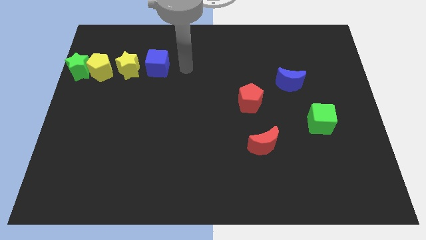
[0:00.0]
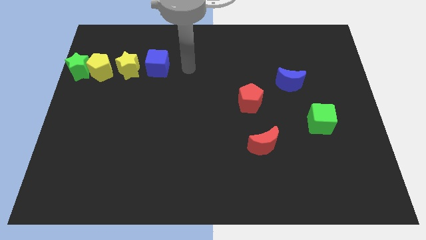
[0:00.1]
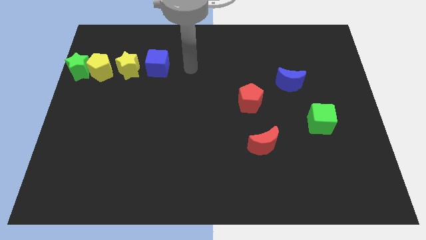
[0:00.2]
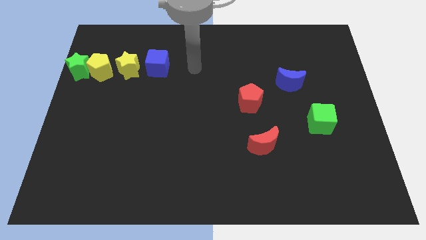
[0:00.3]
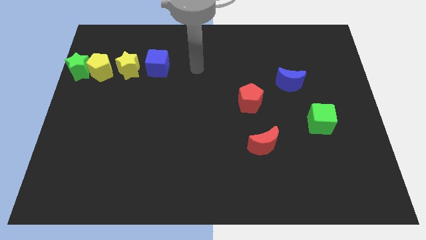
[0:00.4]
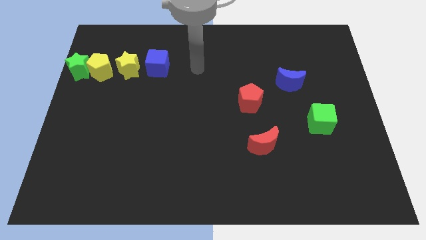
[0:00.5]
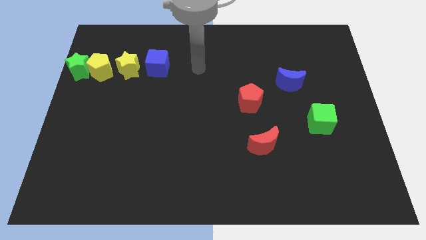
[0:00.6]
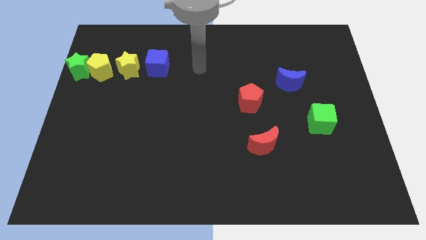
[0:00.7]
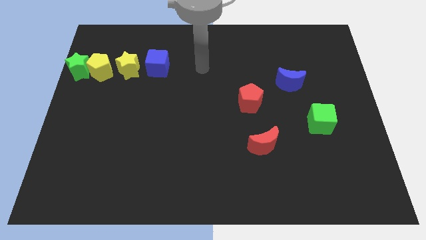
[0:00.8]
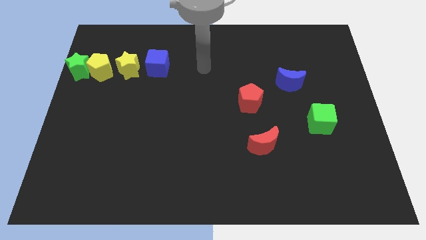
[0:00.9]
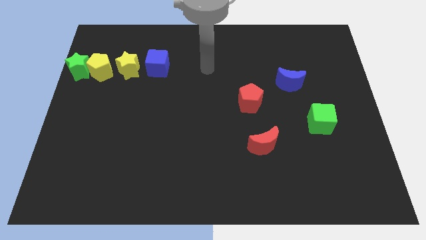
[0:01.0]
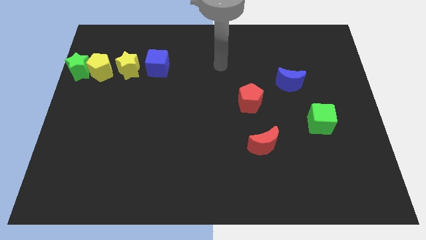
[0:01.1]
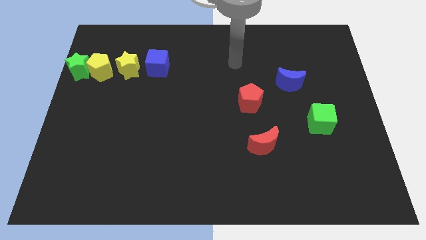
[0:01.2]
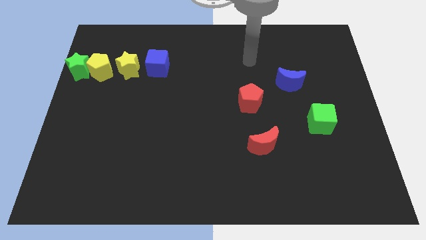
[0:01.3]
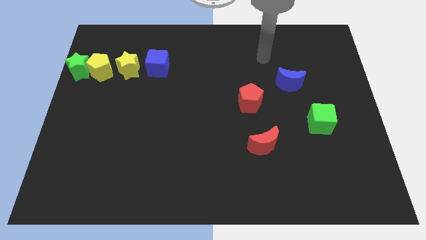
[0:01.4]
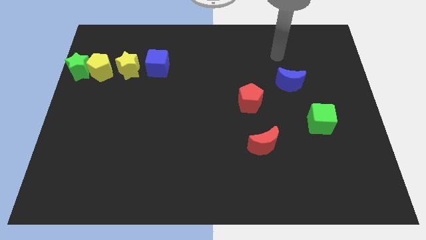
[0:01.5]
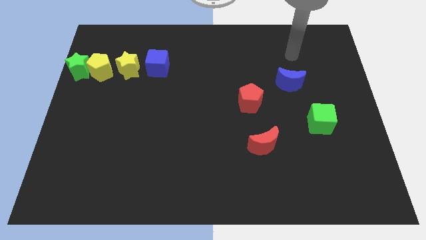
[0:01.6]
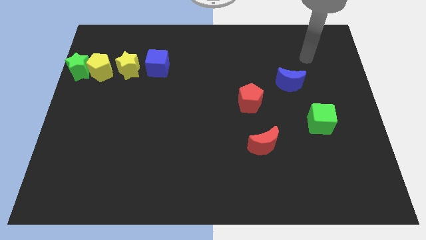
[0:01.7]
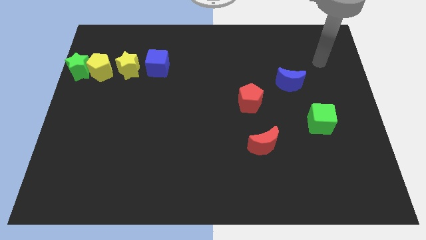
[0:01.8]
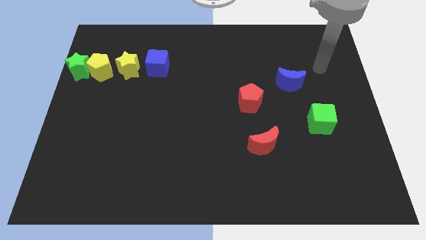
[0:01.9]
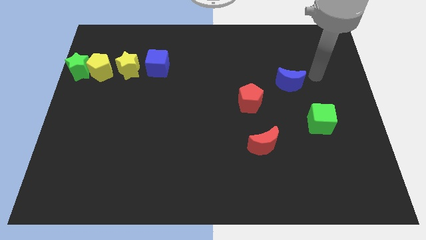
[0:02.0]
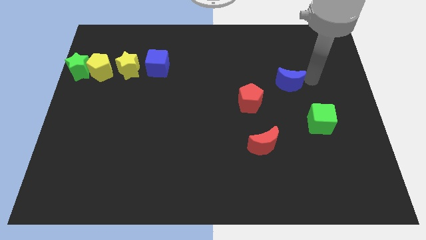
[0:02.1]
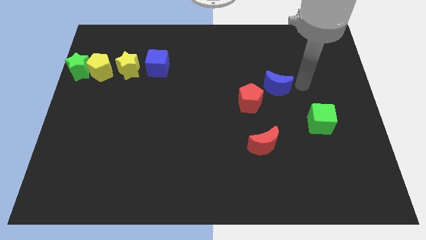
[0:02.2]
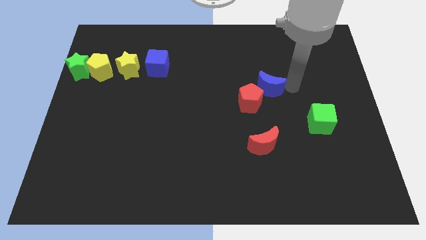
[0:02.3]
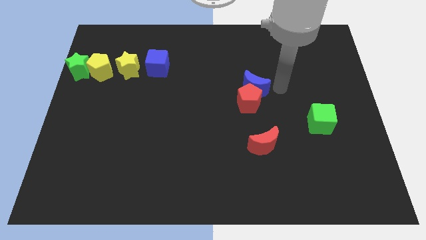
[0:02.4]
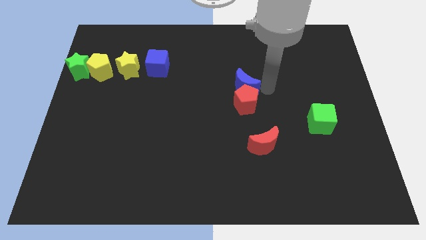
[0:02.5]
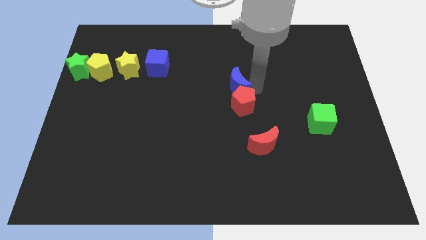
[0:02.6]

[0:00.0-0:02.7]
move the blue crescent to the top of the red pentagon

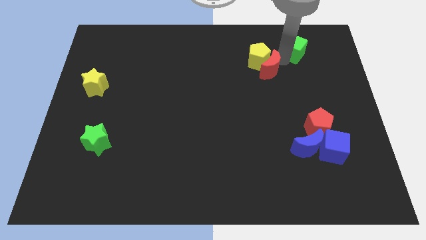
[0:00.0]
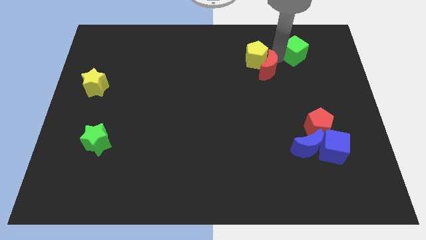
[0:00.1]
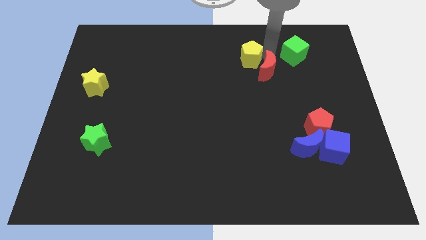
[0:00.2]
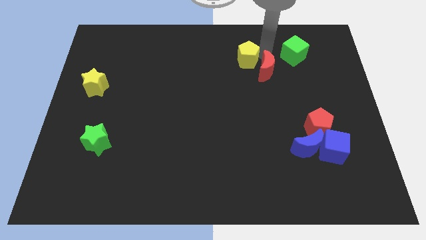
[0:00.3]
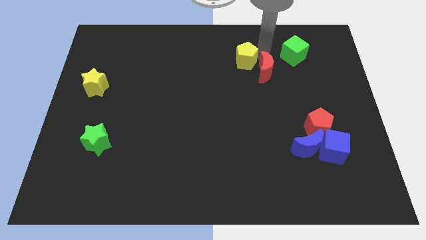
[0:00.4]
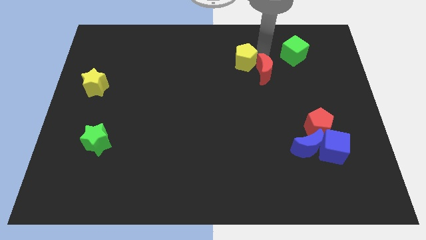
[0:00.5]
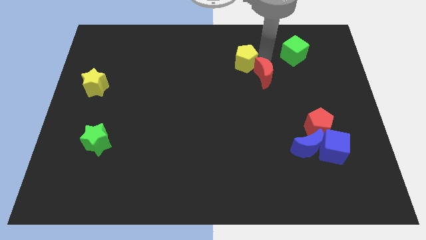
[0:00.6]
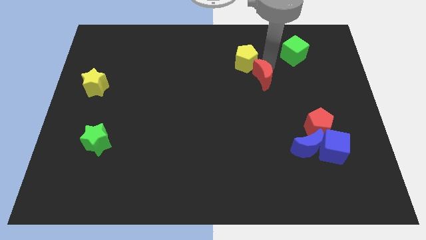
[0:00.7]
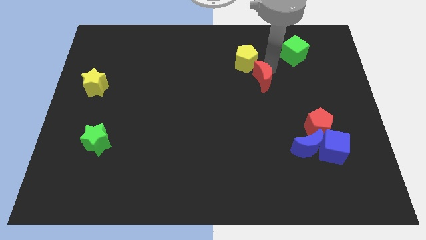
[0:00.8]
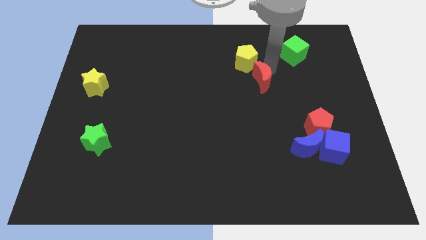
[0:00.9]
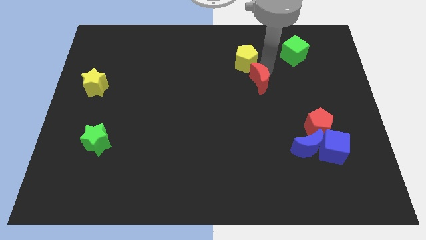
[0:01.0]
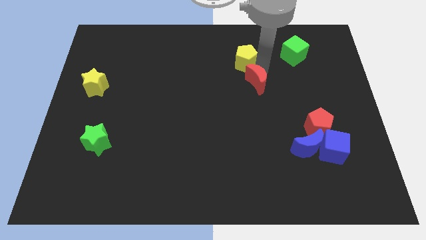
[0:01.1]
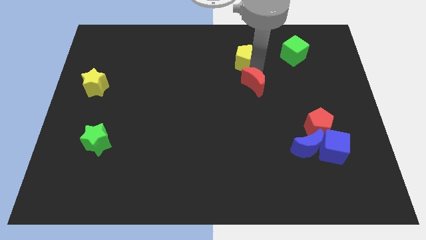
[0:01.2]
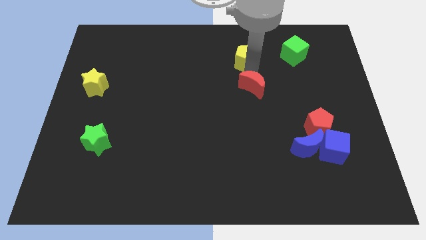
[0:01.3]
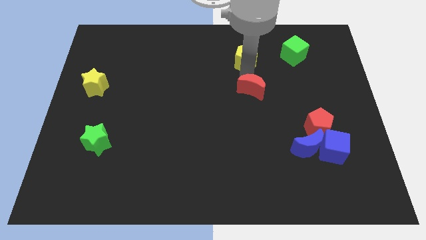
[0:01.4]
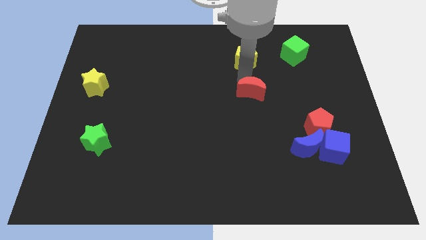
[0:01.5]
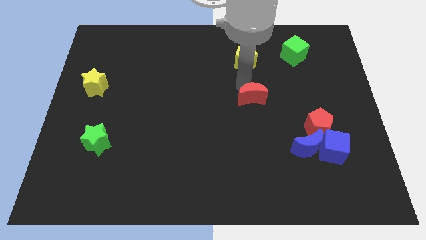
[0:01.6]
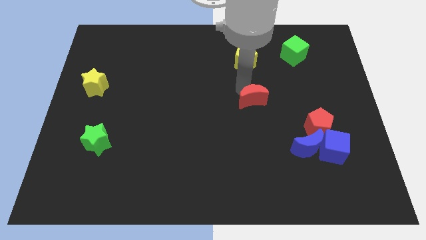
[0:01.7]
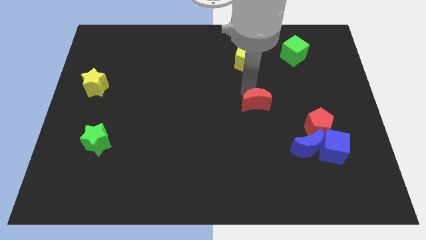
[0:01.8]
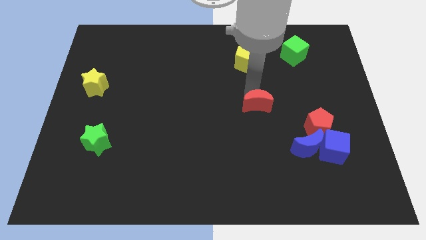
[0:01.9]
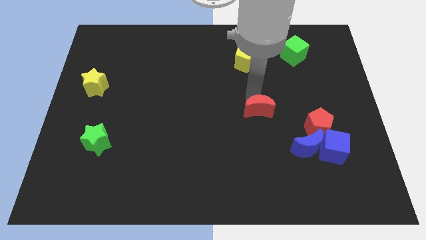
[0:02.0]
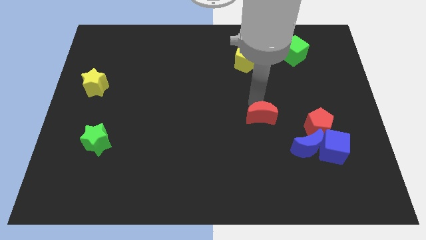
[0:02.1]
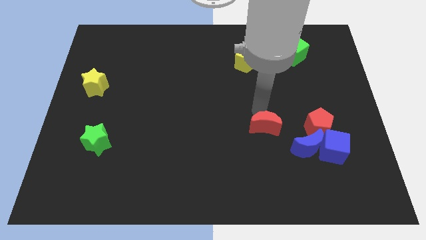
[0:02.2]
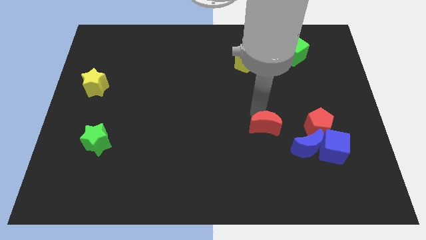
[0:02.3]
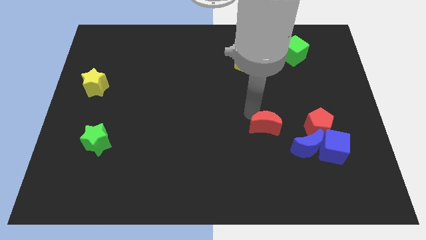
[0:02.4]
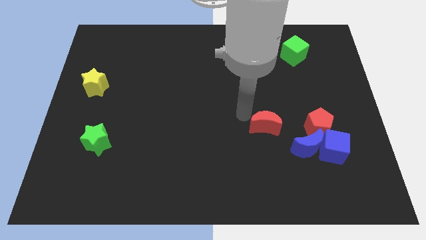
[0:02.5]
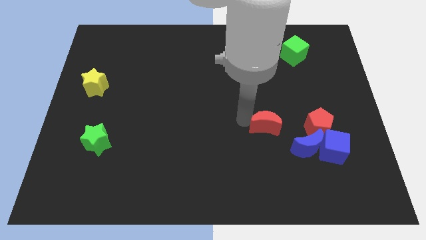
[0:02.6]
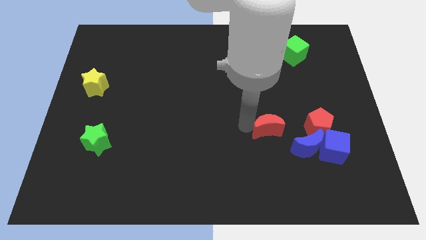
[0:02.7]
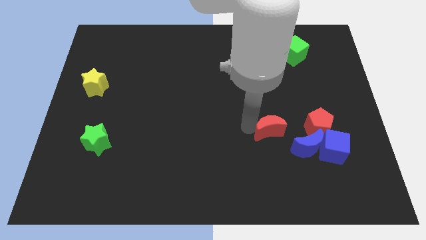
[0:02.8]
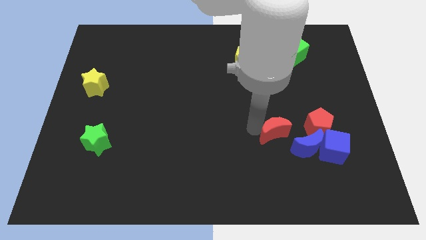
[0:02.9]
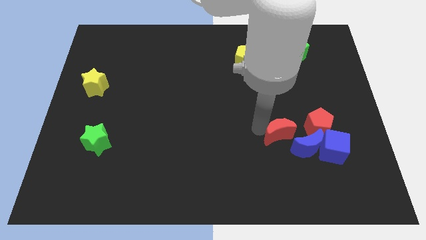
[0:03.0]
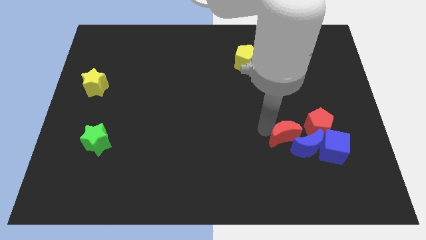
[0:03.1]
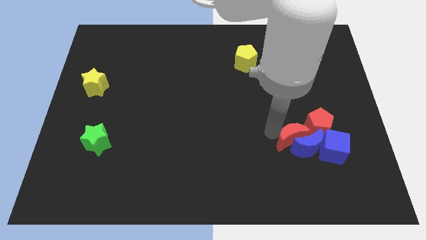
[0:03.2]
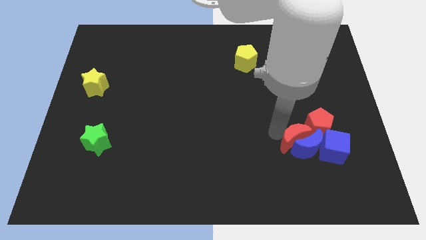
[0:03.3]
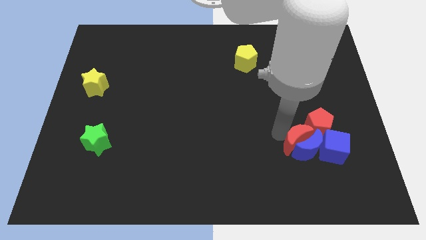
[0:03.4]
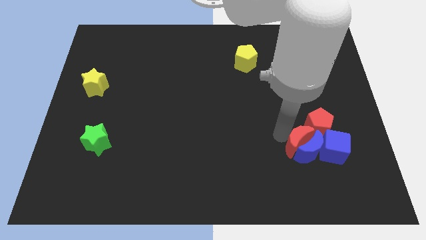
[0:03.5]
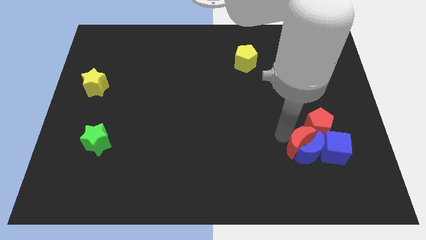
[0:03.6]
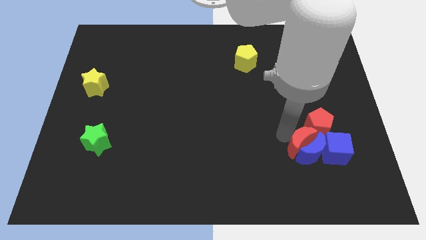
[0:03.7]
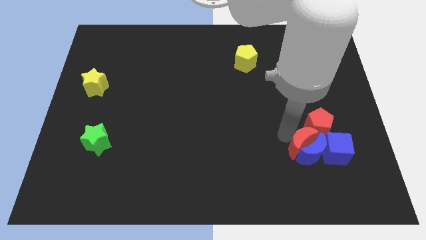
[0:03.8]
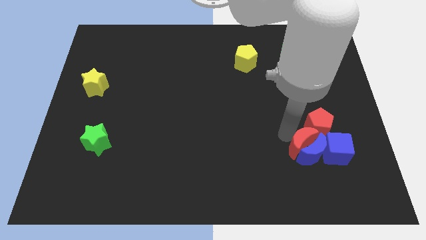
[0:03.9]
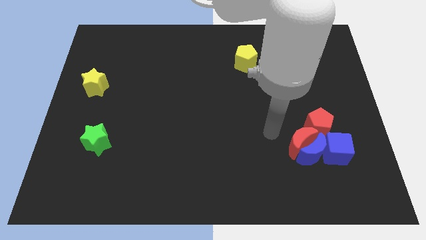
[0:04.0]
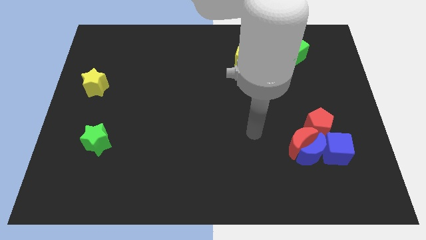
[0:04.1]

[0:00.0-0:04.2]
move the red moon horizontally on the right side of the green star

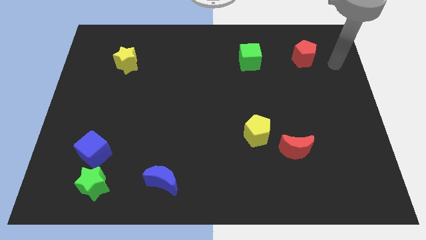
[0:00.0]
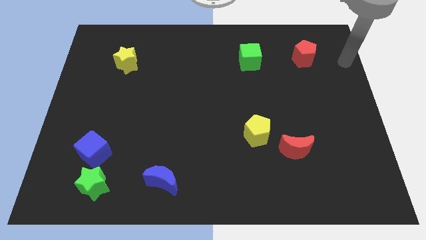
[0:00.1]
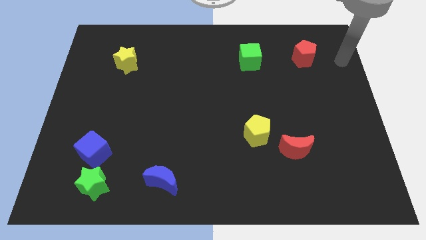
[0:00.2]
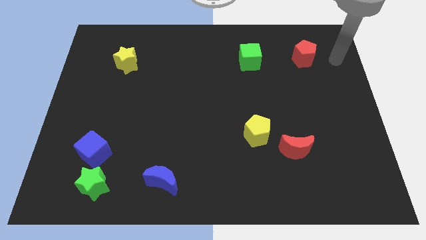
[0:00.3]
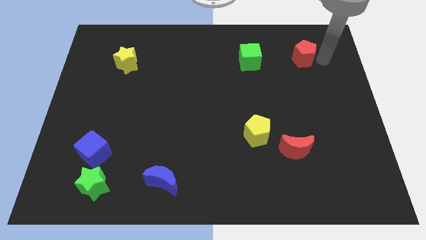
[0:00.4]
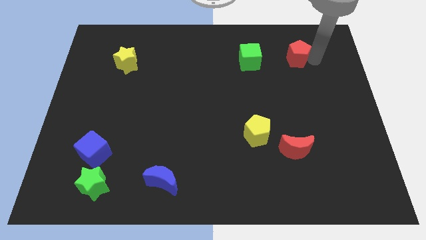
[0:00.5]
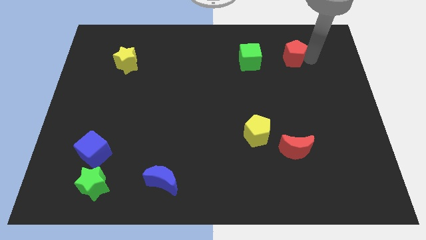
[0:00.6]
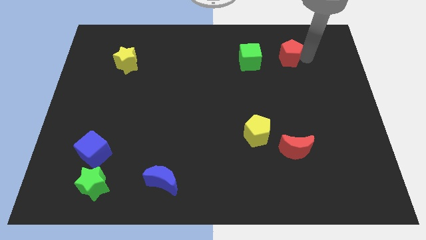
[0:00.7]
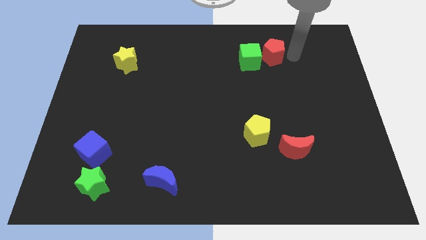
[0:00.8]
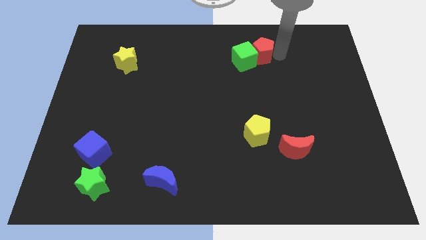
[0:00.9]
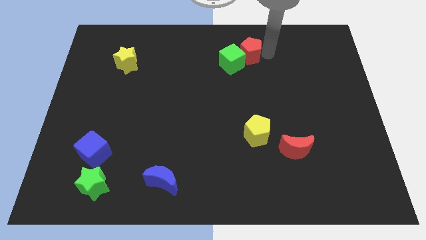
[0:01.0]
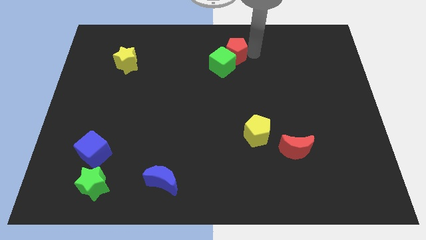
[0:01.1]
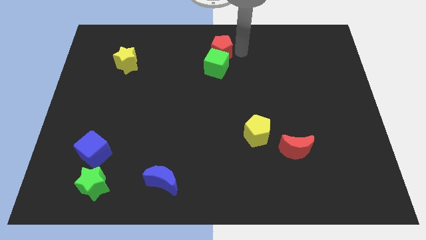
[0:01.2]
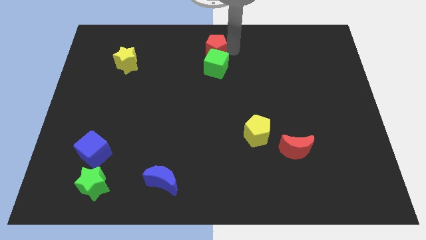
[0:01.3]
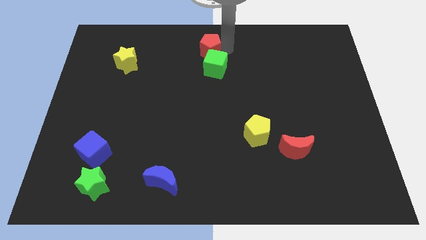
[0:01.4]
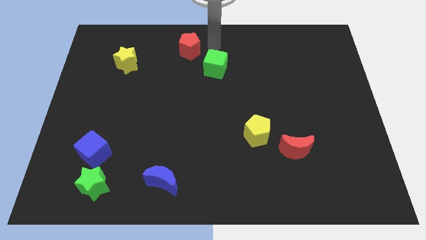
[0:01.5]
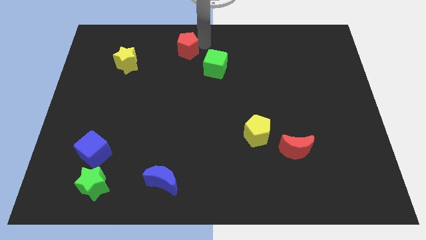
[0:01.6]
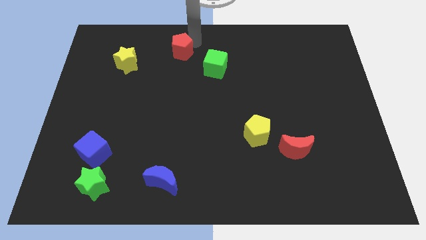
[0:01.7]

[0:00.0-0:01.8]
push the red pentagon into the green cube

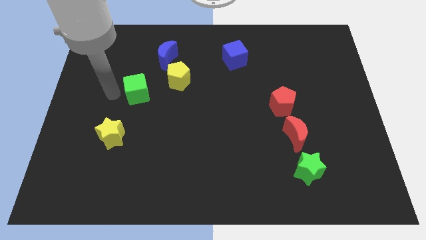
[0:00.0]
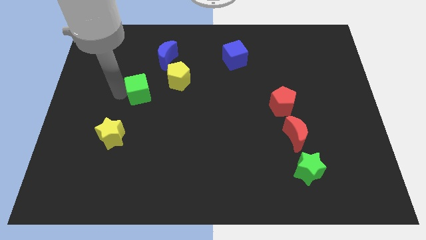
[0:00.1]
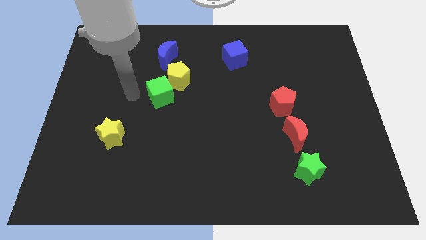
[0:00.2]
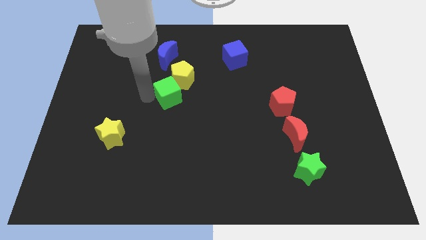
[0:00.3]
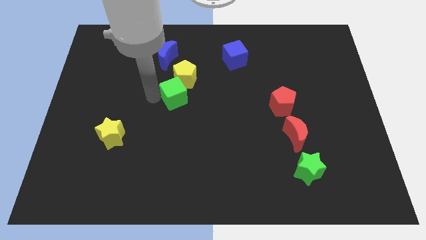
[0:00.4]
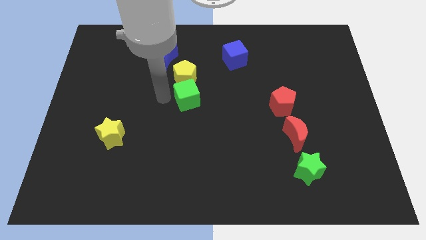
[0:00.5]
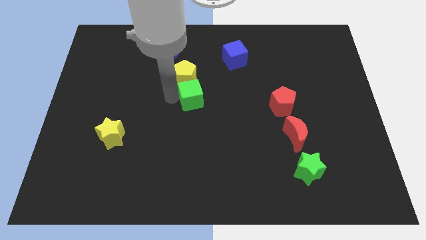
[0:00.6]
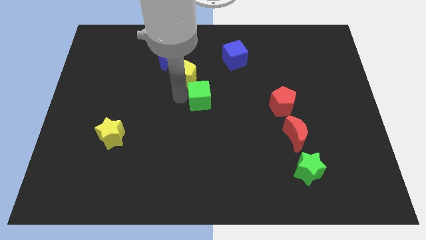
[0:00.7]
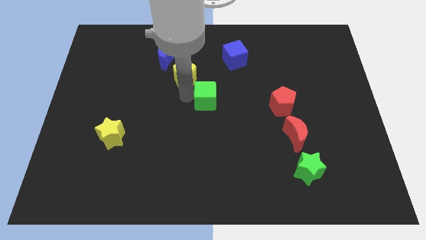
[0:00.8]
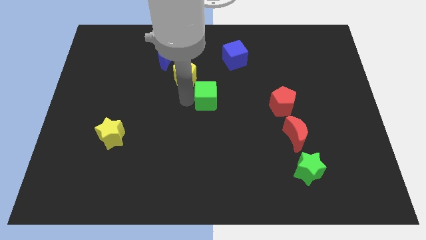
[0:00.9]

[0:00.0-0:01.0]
push the green cube to the center of the board
